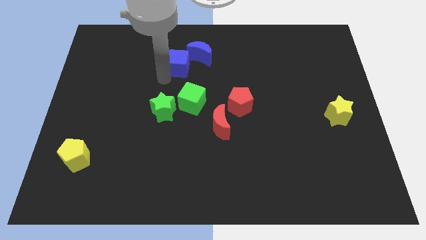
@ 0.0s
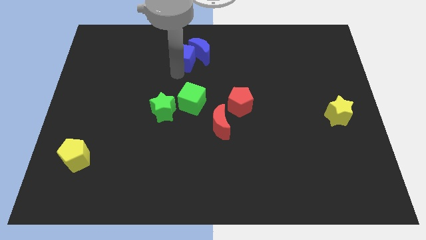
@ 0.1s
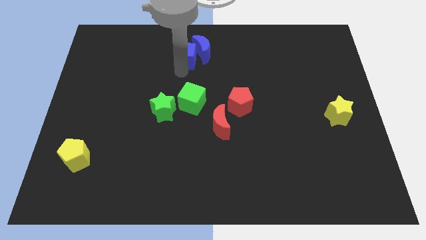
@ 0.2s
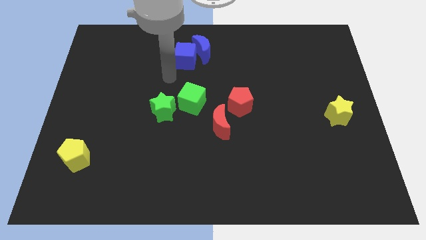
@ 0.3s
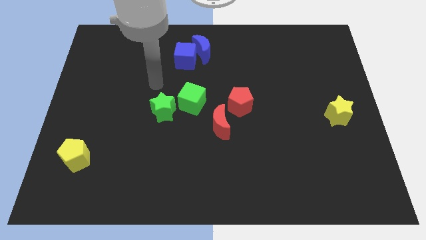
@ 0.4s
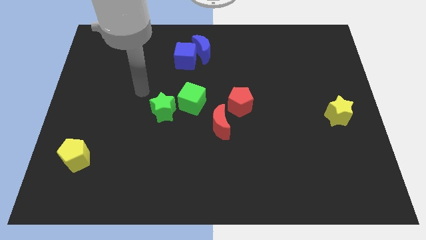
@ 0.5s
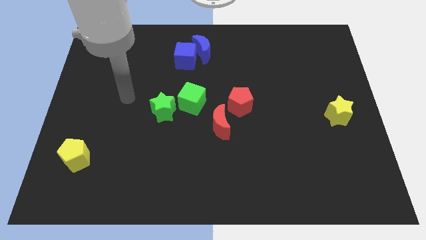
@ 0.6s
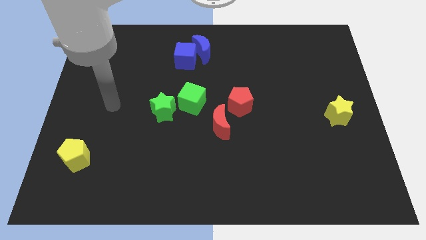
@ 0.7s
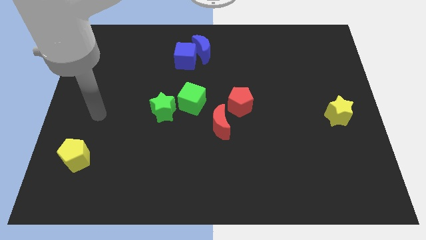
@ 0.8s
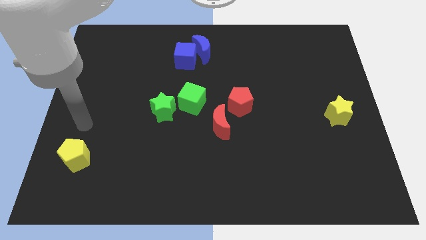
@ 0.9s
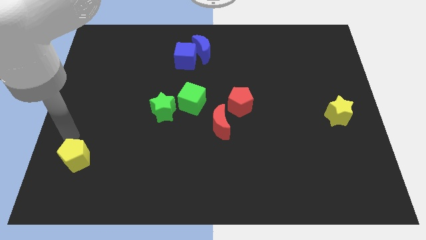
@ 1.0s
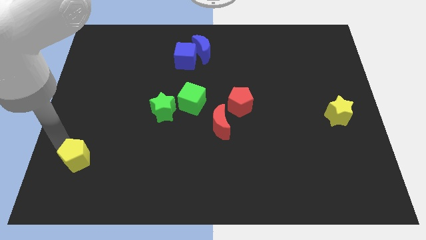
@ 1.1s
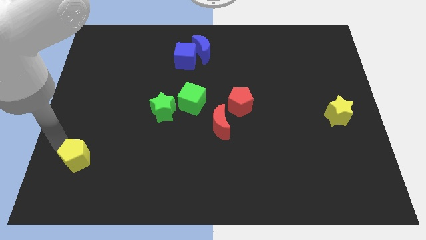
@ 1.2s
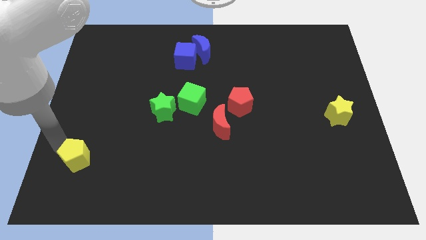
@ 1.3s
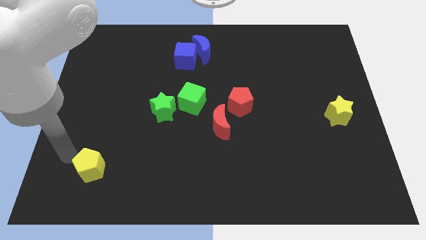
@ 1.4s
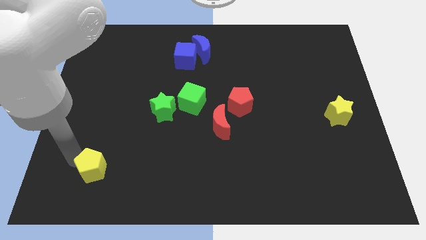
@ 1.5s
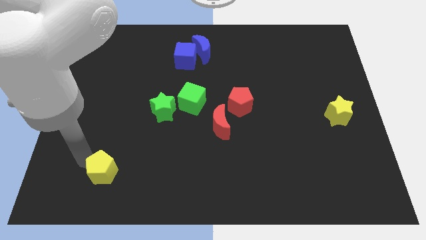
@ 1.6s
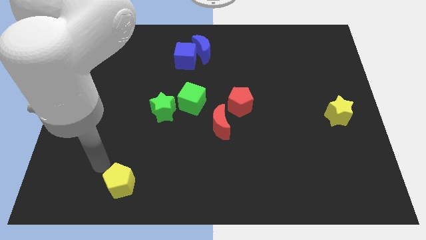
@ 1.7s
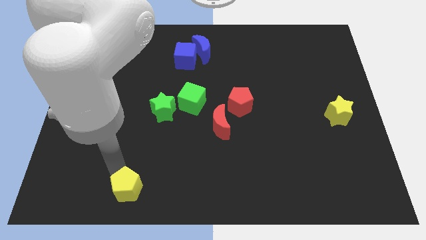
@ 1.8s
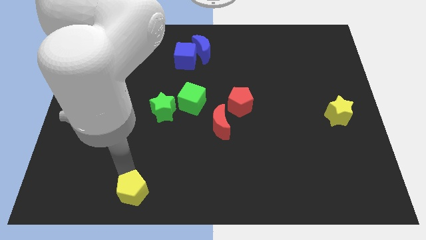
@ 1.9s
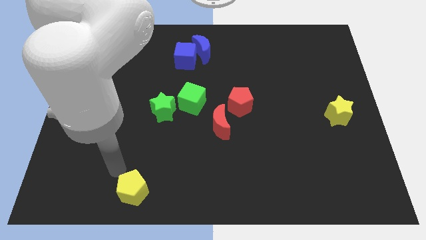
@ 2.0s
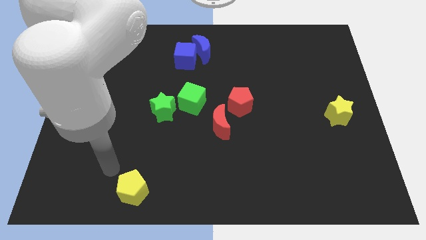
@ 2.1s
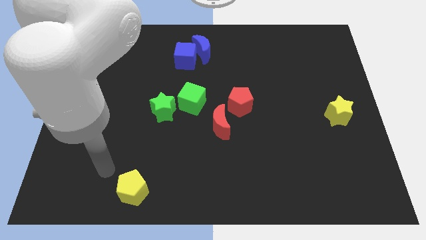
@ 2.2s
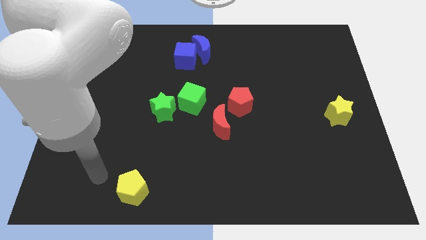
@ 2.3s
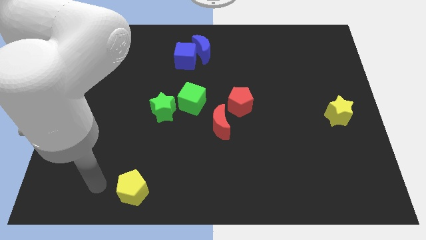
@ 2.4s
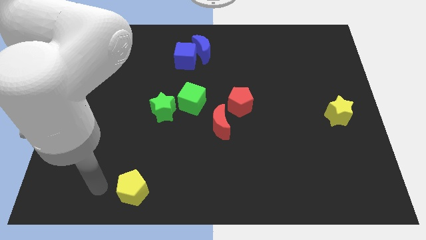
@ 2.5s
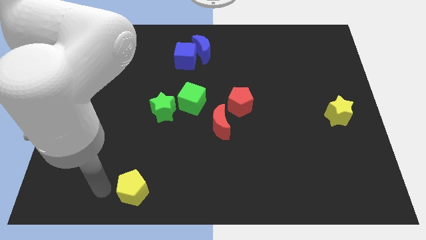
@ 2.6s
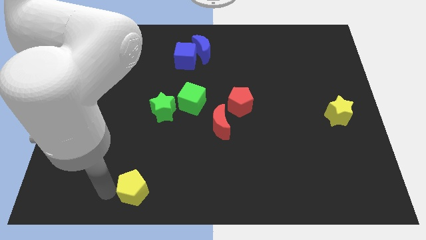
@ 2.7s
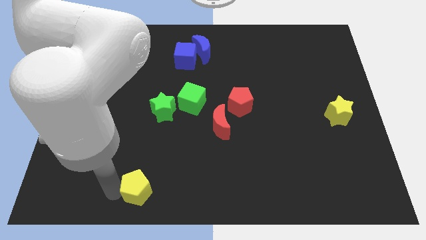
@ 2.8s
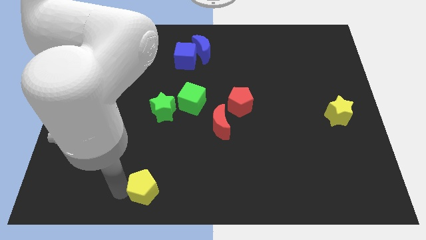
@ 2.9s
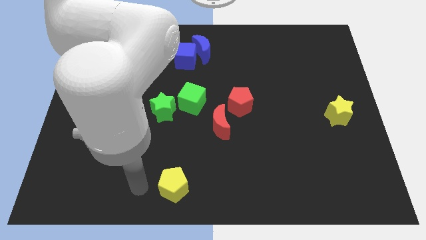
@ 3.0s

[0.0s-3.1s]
push the yellow pentagon to the bottom

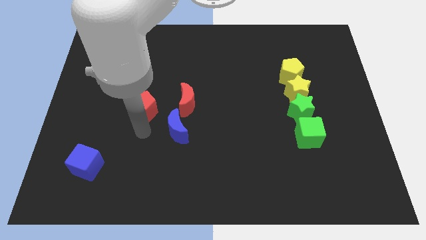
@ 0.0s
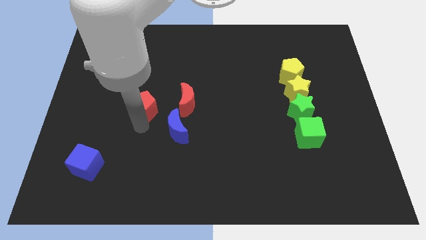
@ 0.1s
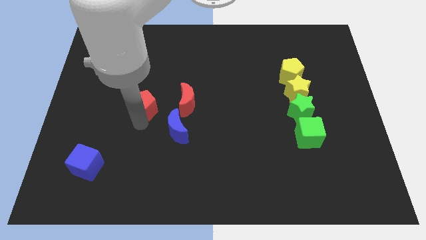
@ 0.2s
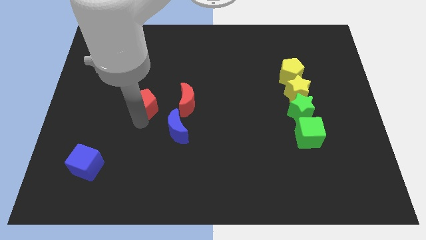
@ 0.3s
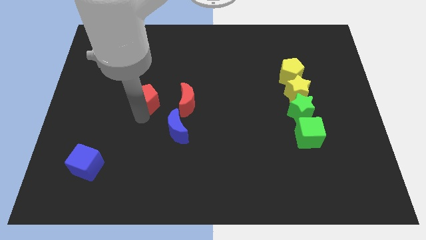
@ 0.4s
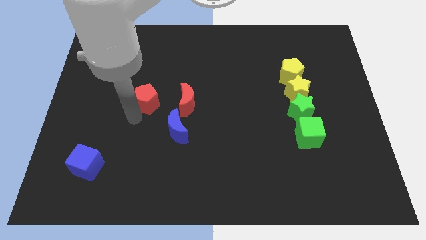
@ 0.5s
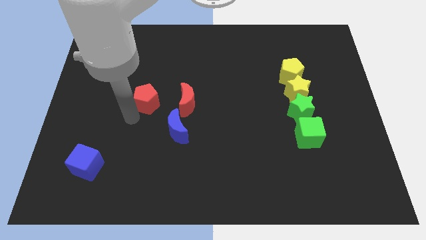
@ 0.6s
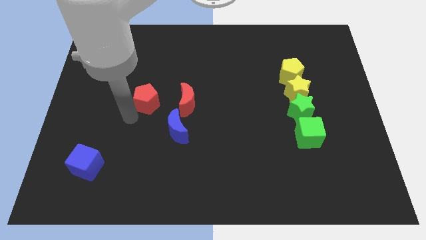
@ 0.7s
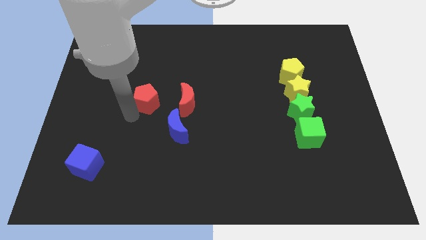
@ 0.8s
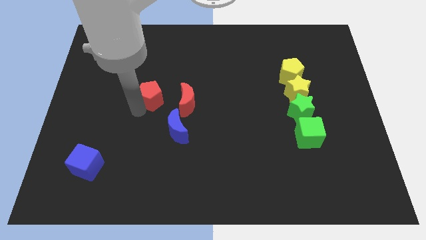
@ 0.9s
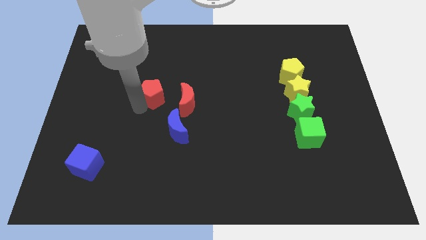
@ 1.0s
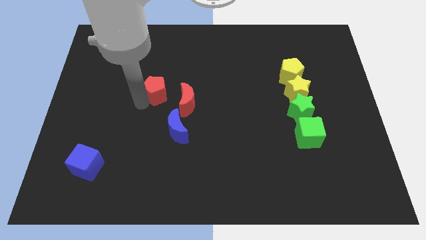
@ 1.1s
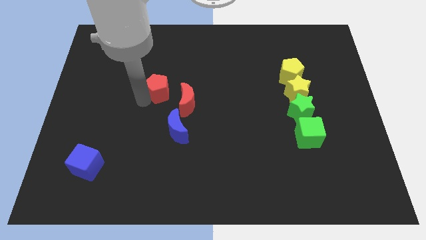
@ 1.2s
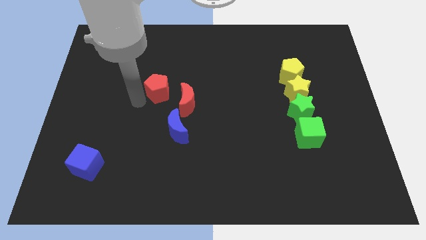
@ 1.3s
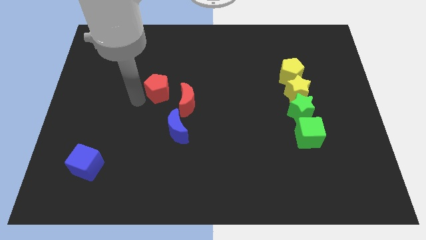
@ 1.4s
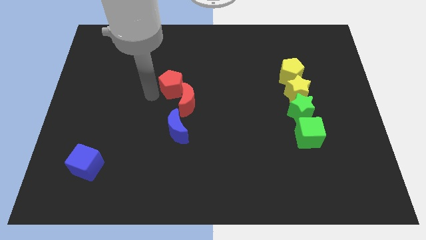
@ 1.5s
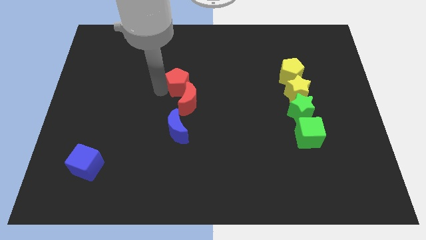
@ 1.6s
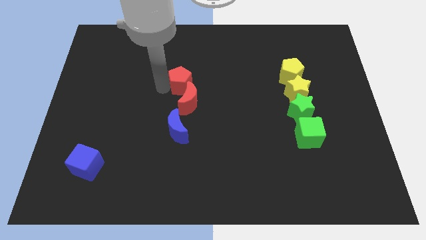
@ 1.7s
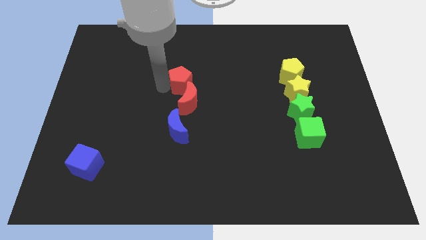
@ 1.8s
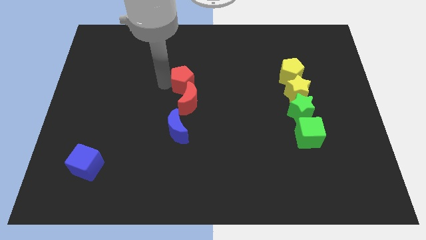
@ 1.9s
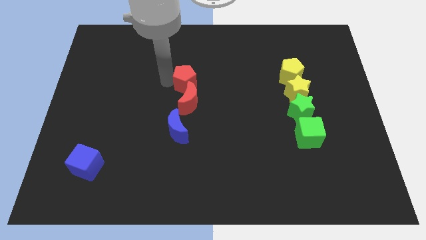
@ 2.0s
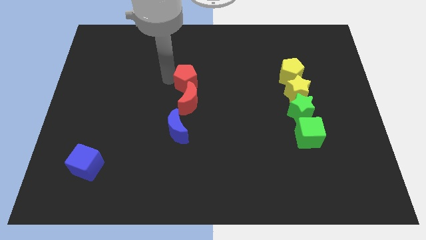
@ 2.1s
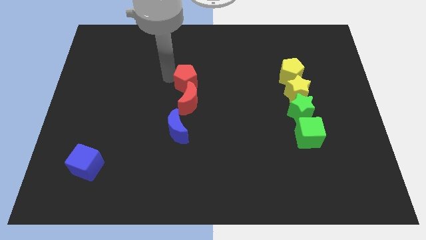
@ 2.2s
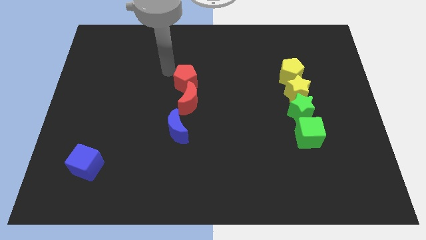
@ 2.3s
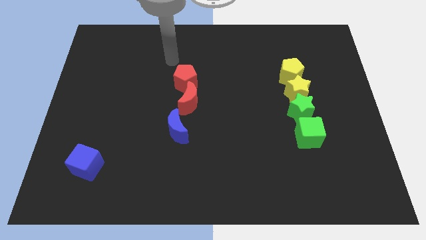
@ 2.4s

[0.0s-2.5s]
move the red pentagon to the top of the red crescent

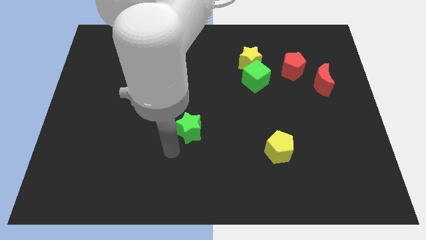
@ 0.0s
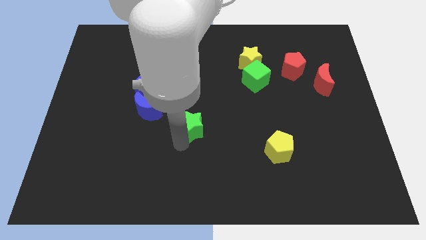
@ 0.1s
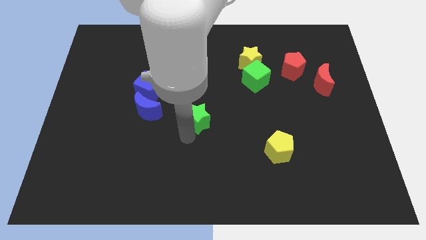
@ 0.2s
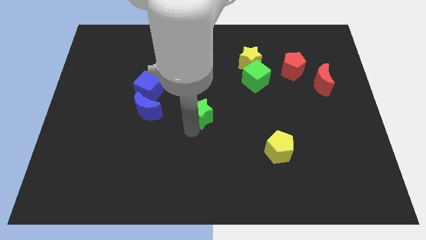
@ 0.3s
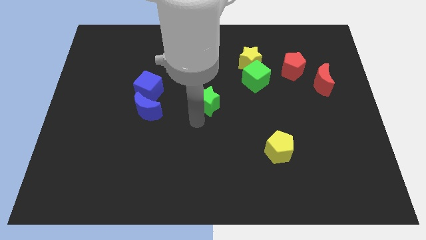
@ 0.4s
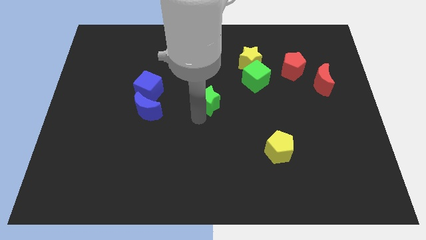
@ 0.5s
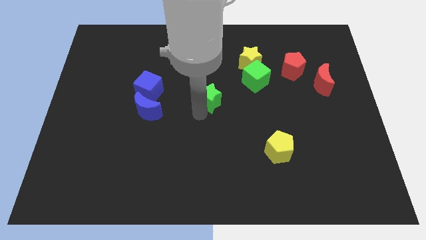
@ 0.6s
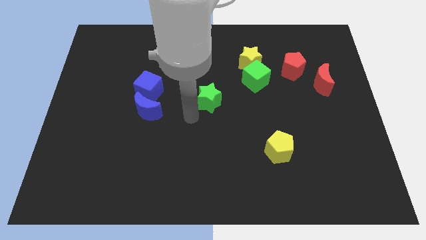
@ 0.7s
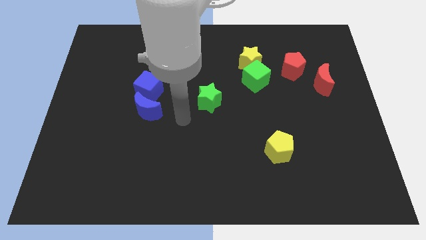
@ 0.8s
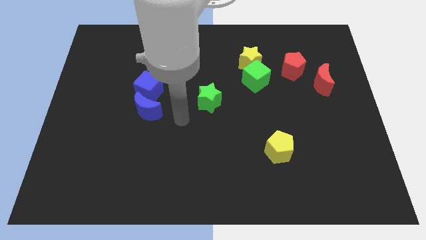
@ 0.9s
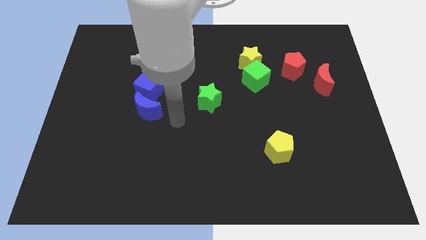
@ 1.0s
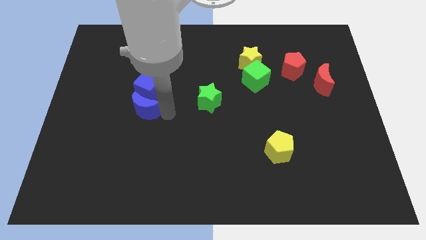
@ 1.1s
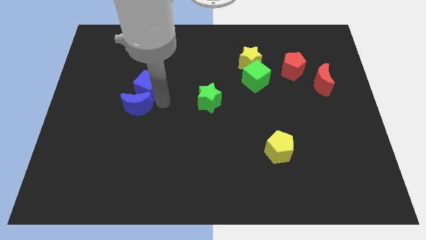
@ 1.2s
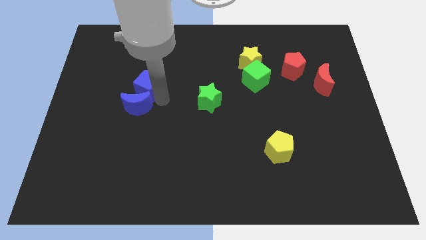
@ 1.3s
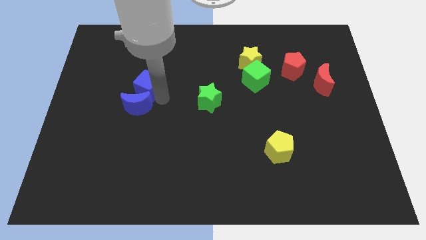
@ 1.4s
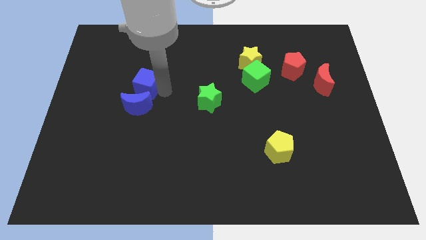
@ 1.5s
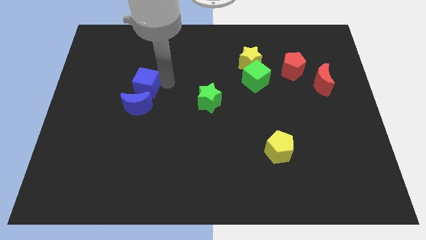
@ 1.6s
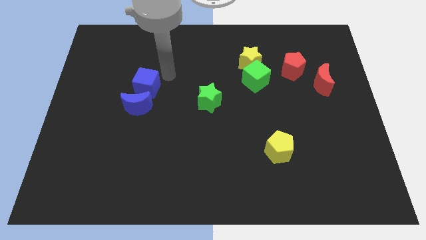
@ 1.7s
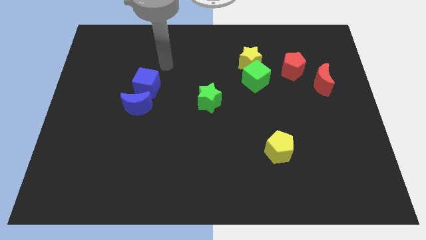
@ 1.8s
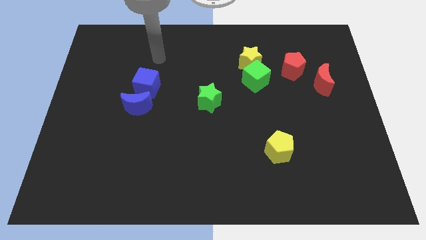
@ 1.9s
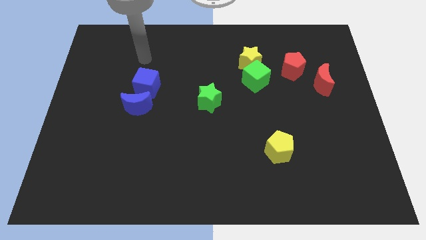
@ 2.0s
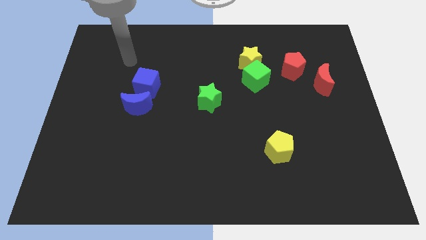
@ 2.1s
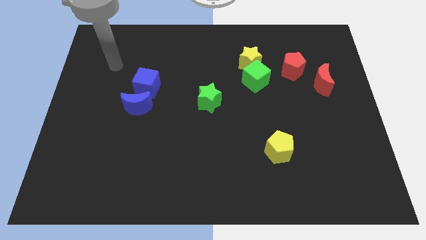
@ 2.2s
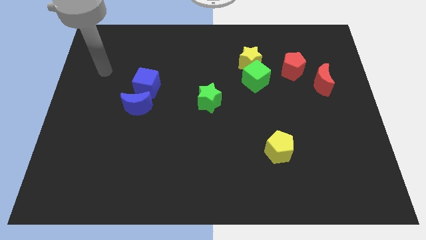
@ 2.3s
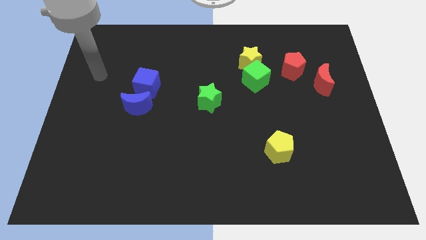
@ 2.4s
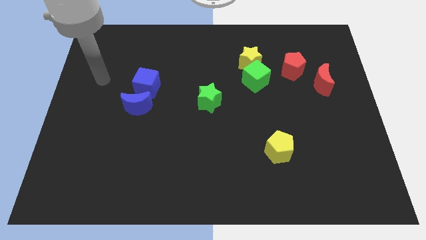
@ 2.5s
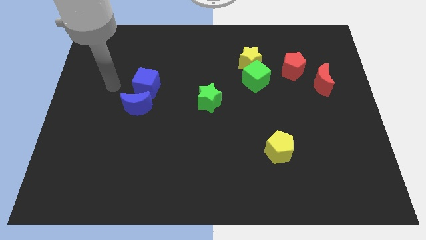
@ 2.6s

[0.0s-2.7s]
move the green star to the right of the blue moon

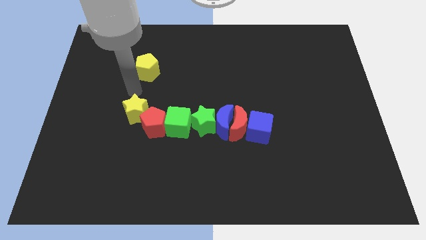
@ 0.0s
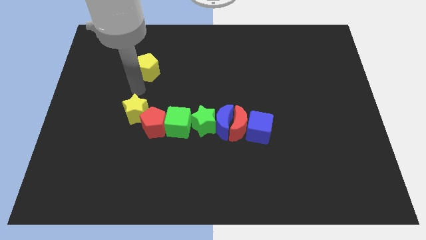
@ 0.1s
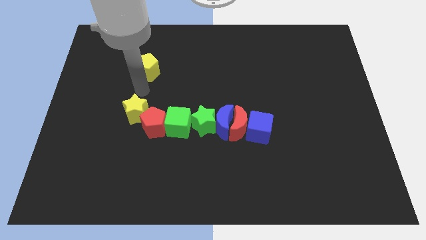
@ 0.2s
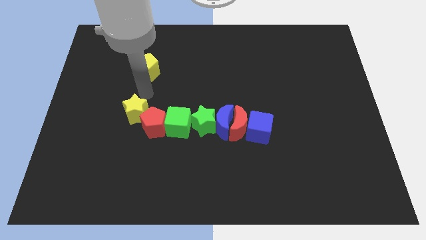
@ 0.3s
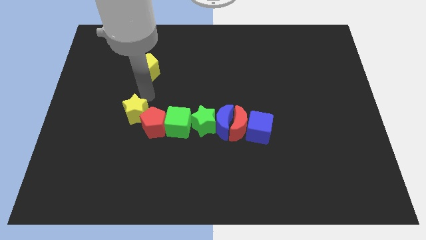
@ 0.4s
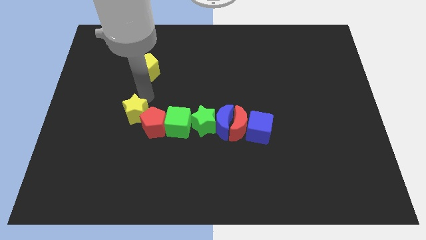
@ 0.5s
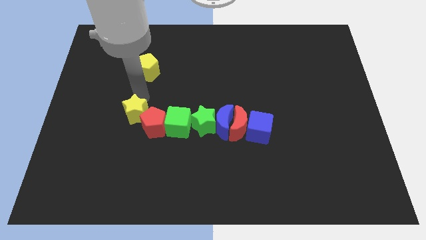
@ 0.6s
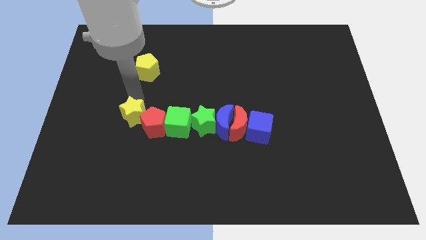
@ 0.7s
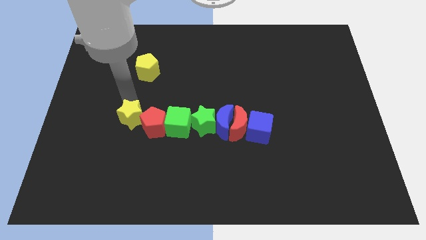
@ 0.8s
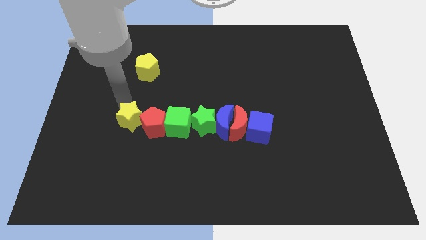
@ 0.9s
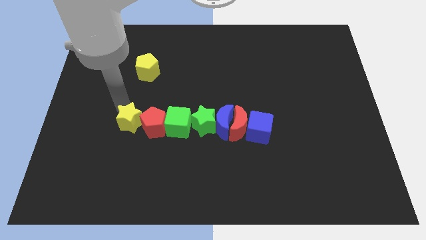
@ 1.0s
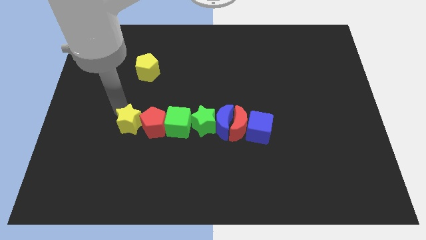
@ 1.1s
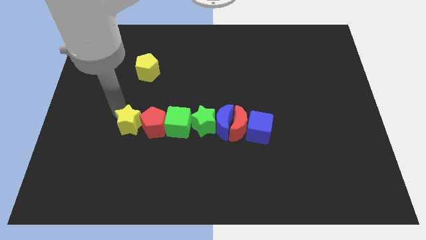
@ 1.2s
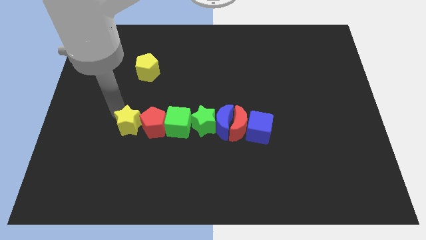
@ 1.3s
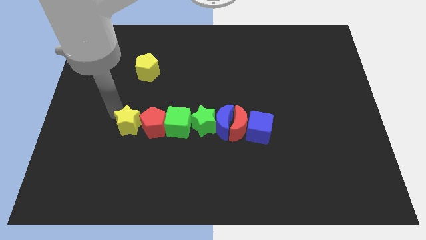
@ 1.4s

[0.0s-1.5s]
move the yellow star to the left of the red pentagon
